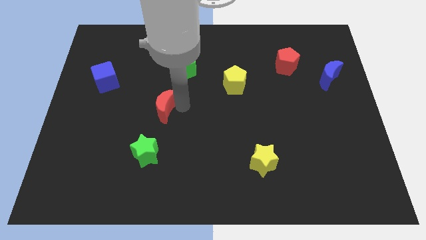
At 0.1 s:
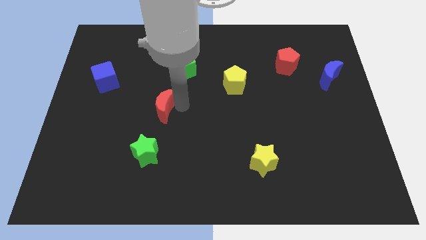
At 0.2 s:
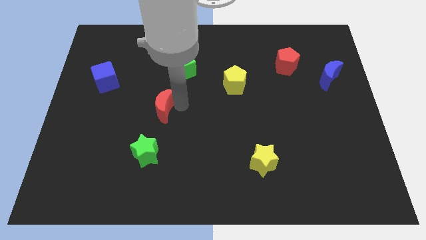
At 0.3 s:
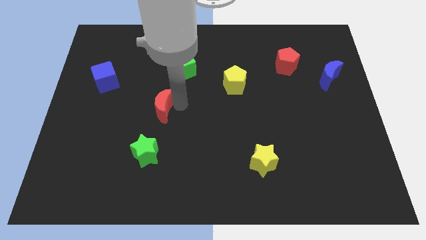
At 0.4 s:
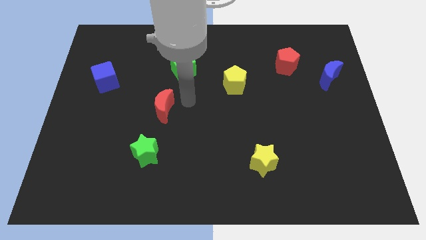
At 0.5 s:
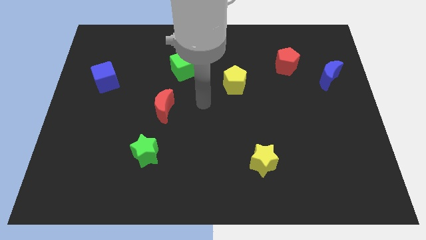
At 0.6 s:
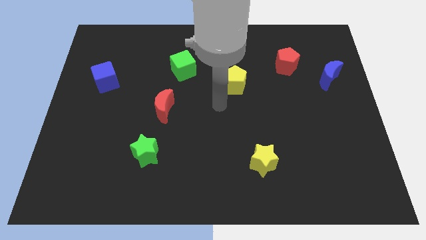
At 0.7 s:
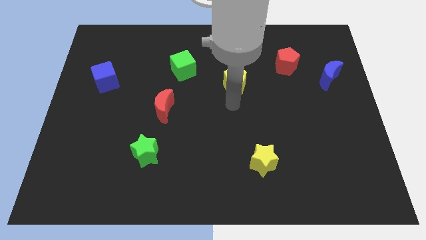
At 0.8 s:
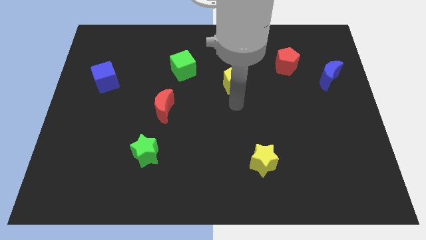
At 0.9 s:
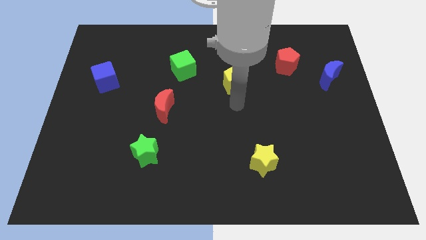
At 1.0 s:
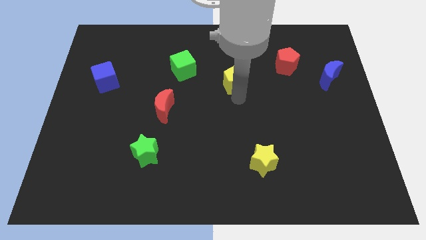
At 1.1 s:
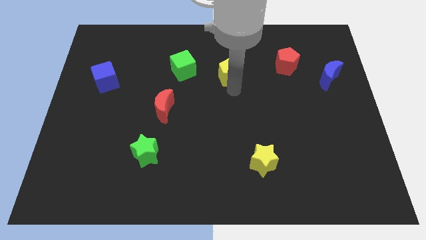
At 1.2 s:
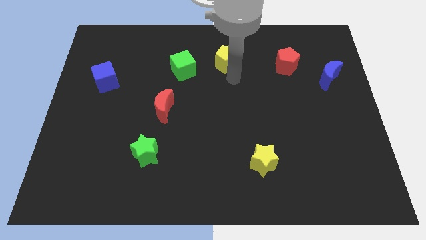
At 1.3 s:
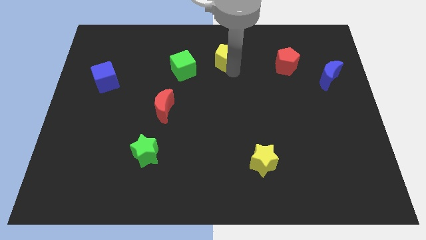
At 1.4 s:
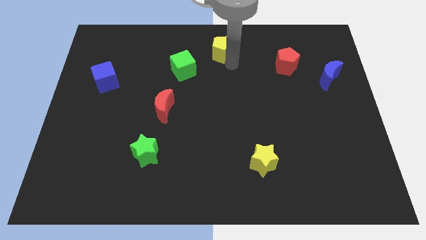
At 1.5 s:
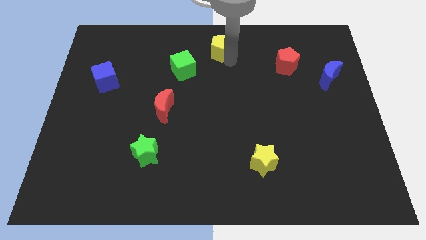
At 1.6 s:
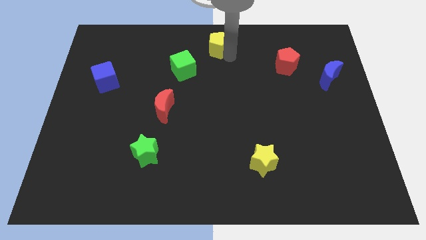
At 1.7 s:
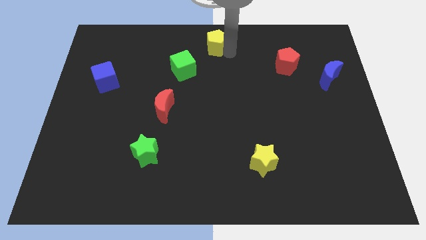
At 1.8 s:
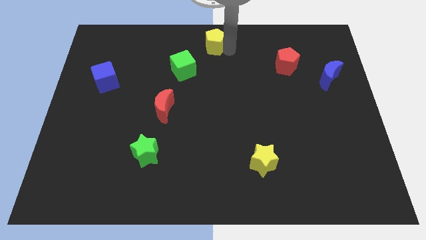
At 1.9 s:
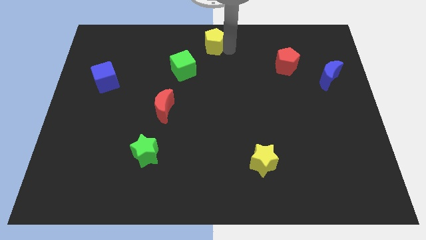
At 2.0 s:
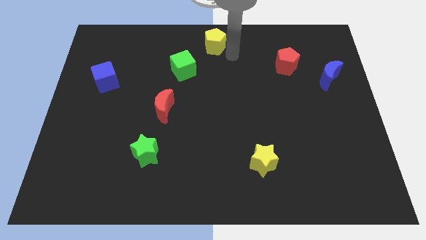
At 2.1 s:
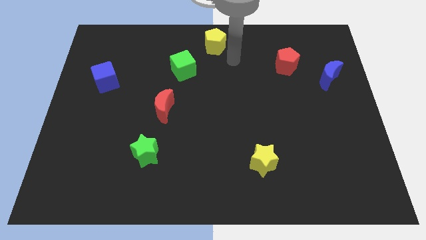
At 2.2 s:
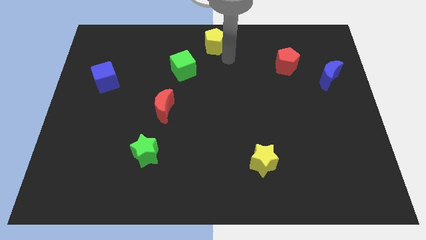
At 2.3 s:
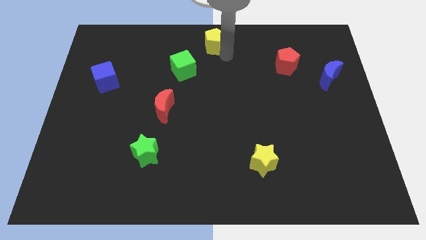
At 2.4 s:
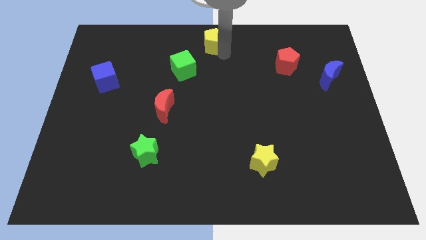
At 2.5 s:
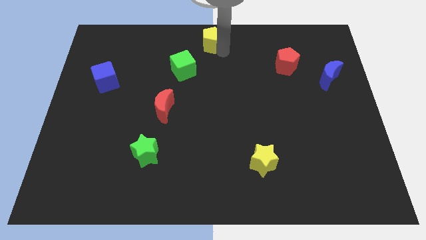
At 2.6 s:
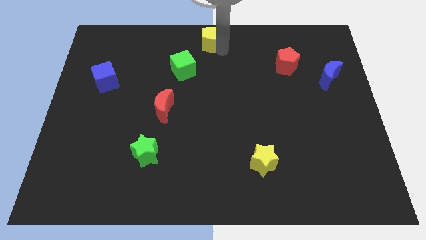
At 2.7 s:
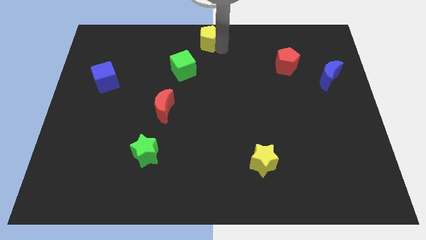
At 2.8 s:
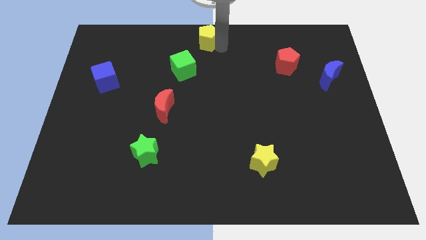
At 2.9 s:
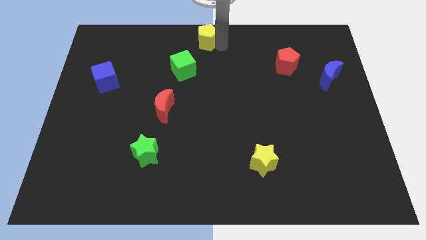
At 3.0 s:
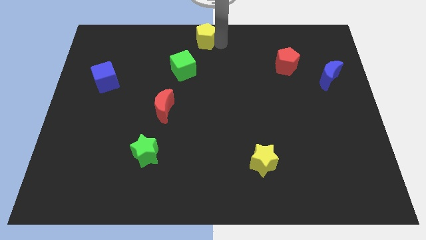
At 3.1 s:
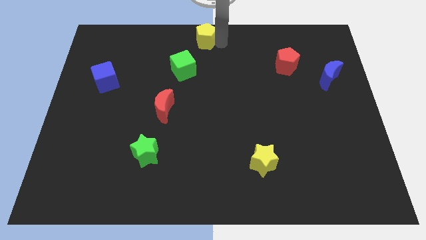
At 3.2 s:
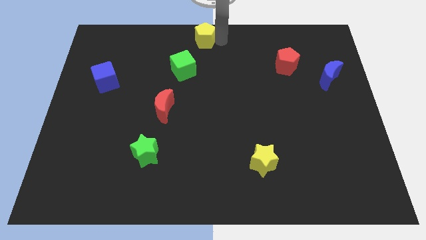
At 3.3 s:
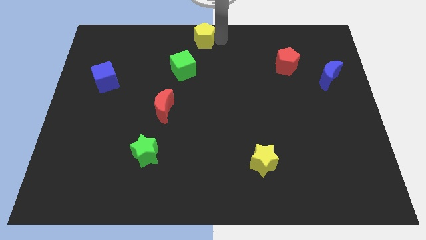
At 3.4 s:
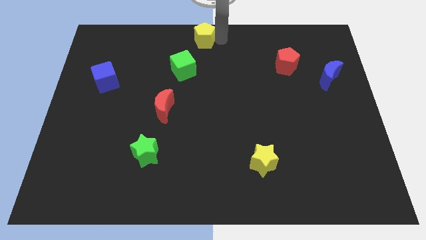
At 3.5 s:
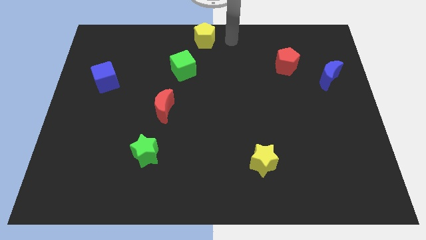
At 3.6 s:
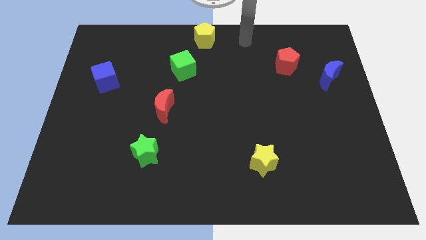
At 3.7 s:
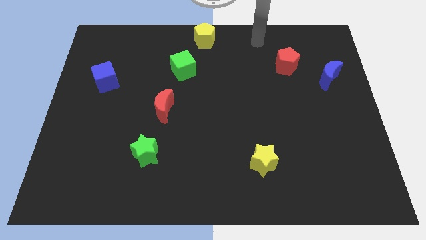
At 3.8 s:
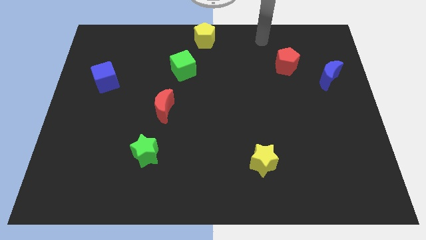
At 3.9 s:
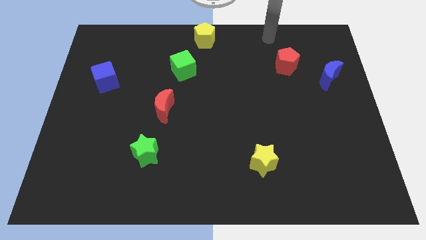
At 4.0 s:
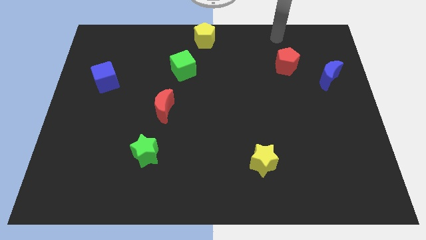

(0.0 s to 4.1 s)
push the yellow pentagon to the top of the green cube

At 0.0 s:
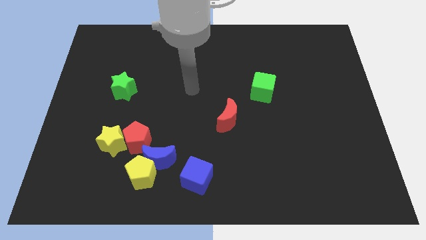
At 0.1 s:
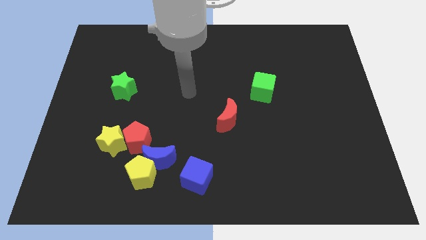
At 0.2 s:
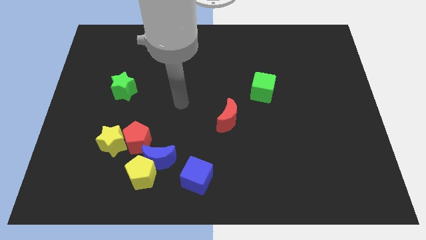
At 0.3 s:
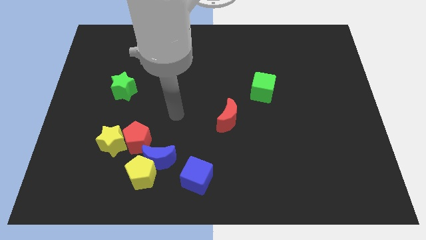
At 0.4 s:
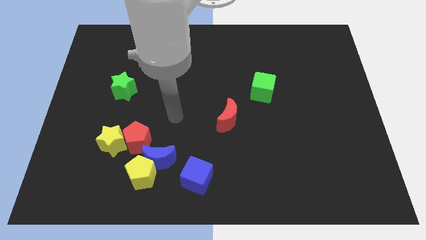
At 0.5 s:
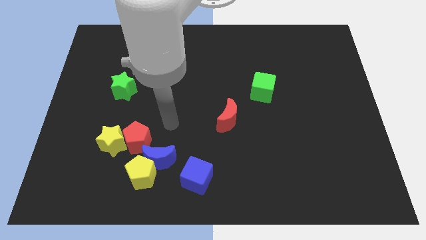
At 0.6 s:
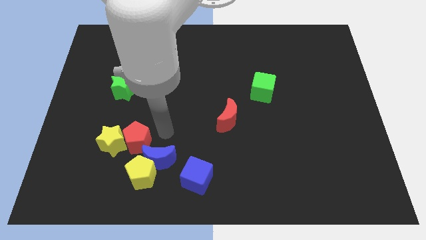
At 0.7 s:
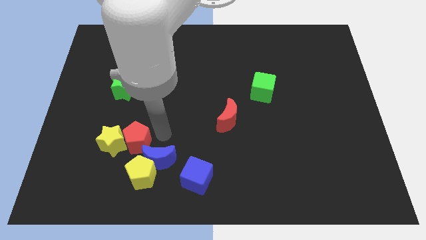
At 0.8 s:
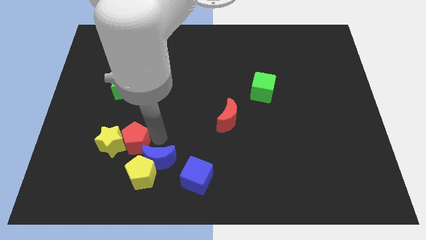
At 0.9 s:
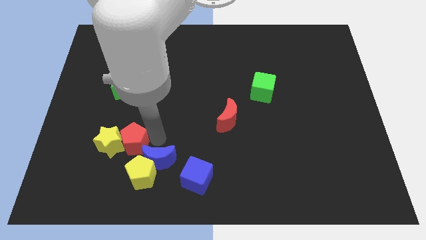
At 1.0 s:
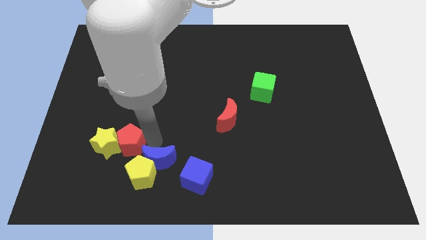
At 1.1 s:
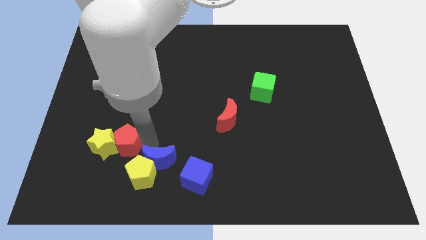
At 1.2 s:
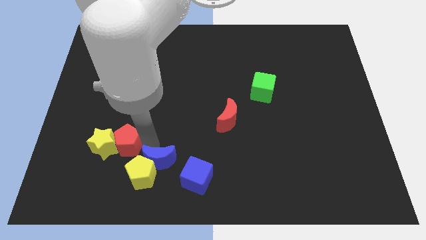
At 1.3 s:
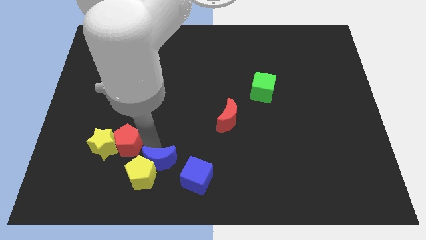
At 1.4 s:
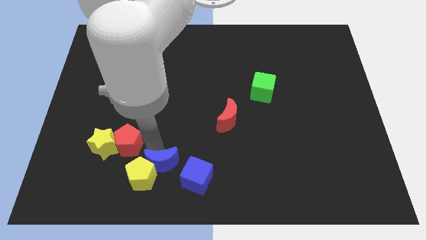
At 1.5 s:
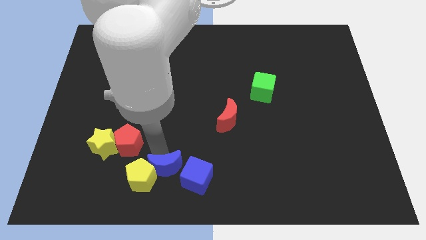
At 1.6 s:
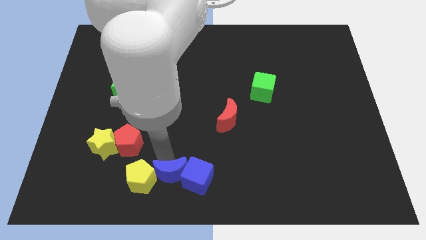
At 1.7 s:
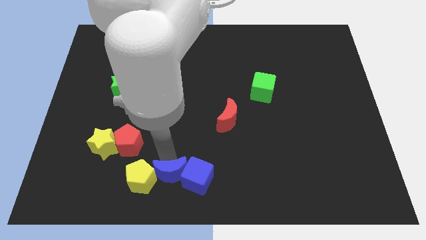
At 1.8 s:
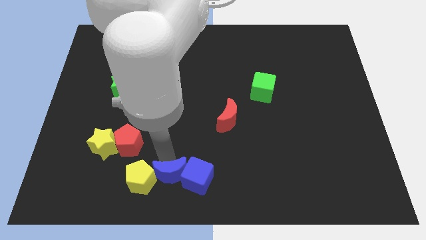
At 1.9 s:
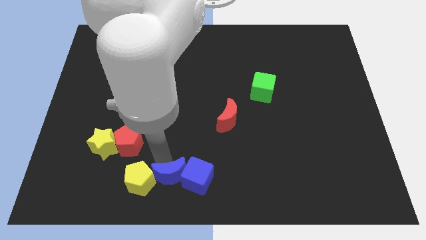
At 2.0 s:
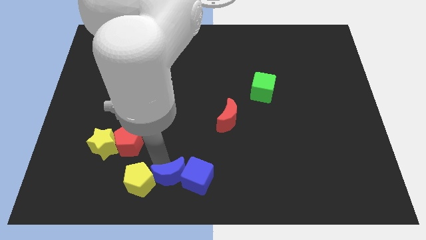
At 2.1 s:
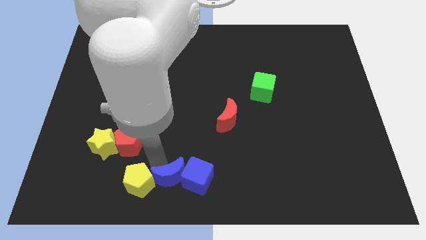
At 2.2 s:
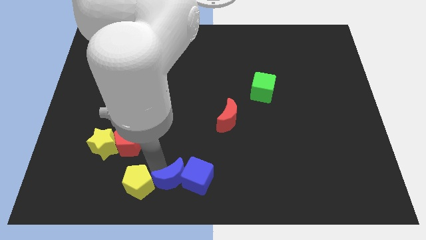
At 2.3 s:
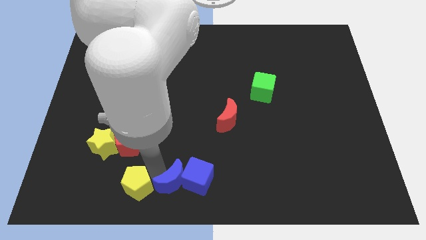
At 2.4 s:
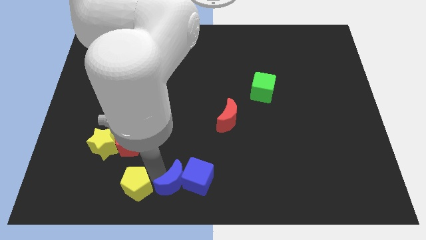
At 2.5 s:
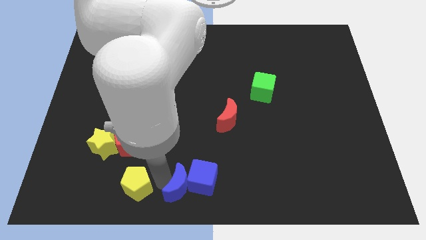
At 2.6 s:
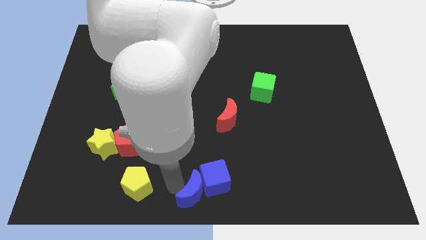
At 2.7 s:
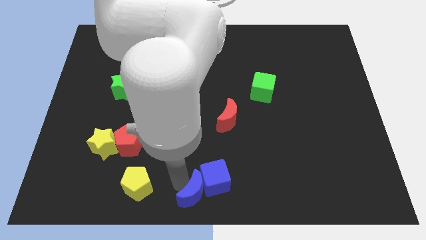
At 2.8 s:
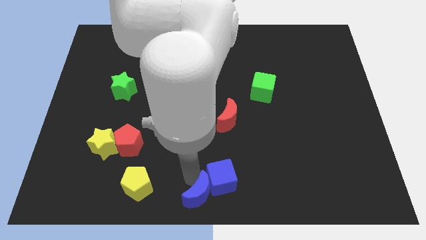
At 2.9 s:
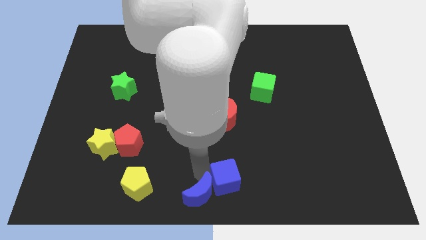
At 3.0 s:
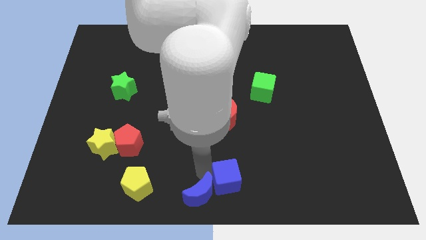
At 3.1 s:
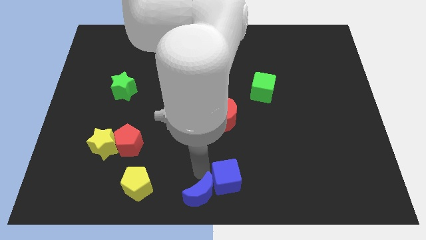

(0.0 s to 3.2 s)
separate the red pentagon and blue blocks

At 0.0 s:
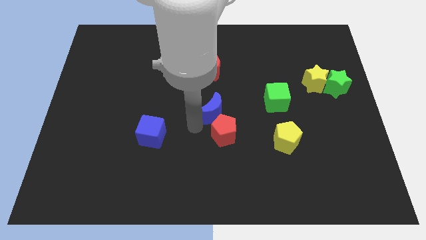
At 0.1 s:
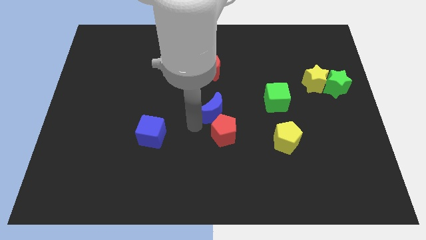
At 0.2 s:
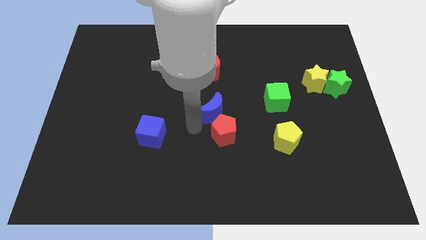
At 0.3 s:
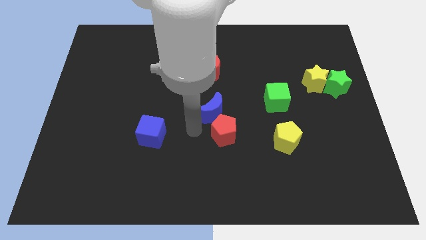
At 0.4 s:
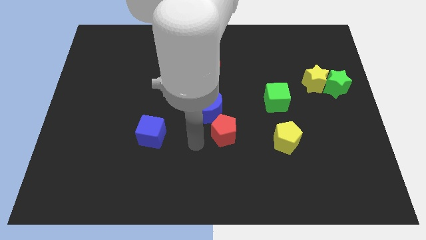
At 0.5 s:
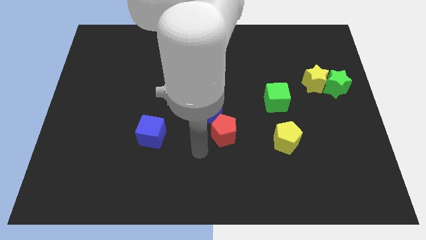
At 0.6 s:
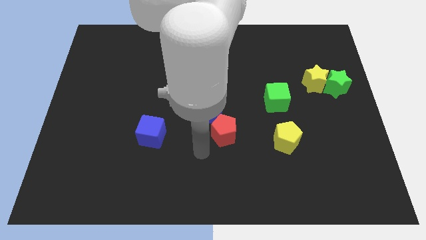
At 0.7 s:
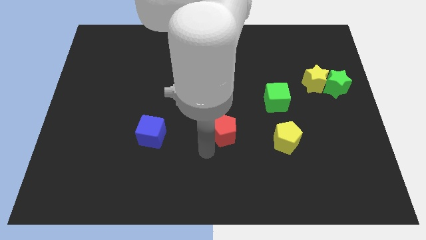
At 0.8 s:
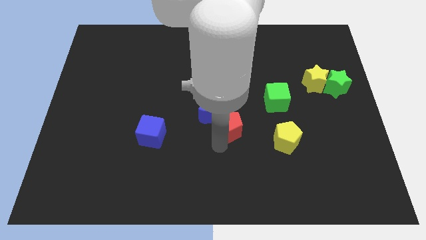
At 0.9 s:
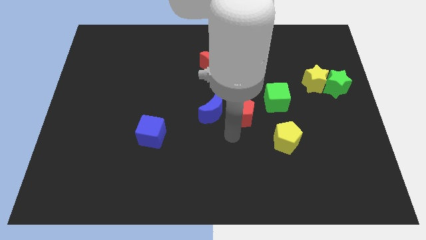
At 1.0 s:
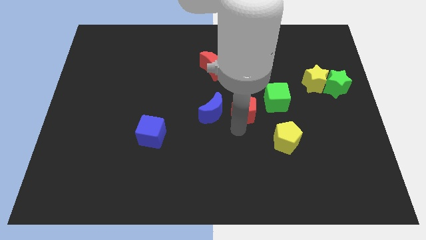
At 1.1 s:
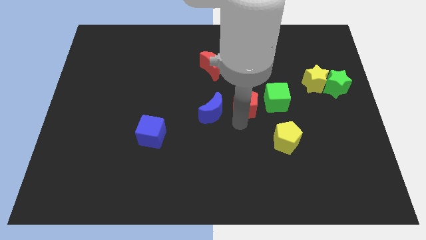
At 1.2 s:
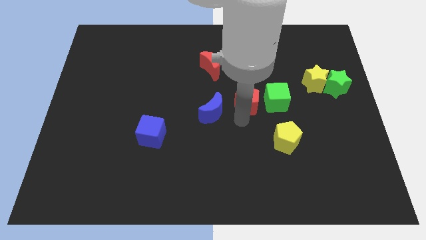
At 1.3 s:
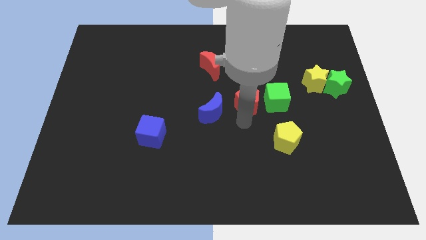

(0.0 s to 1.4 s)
move red pentagon to the right of the blue crescent

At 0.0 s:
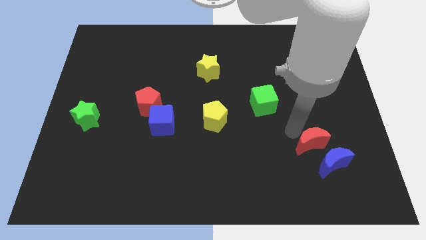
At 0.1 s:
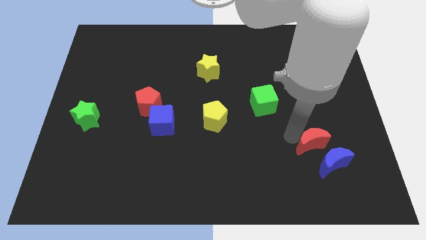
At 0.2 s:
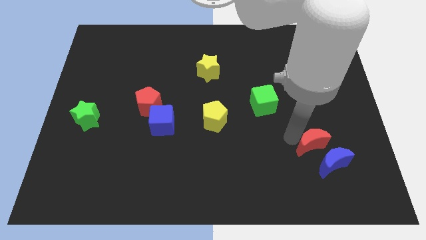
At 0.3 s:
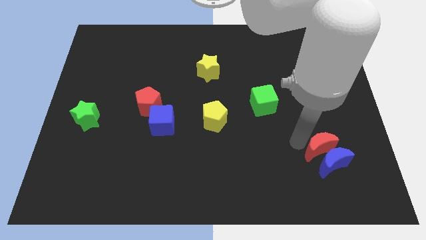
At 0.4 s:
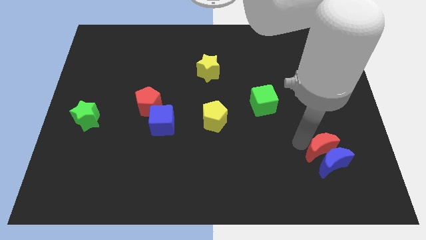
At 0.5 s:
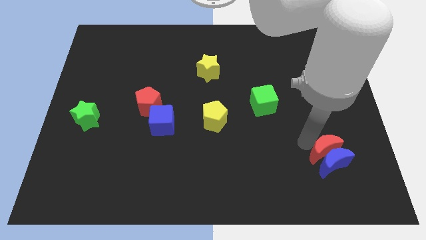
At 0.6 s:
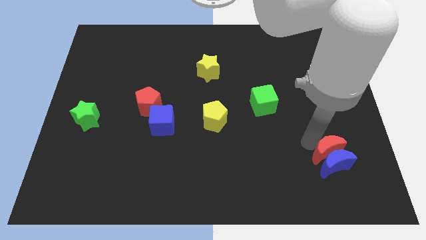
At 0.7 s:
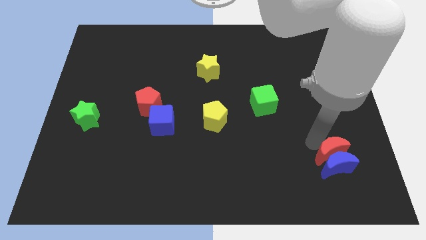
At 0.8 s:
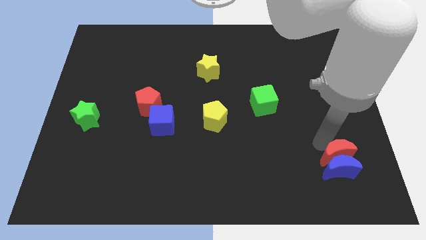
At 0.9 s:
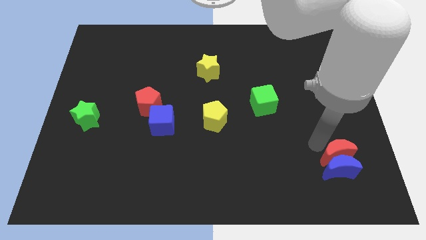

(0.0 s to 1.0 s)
push red crescent into blue crescent
